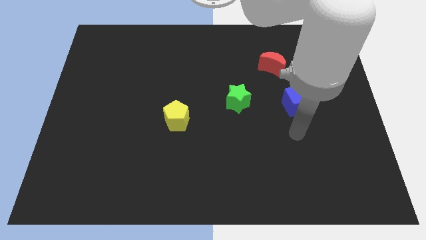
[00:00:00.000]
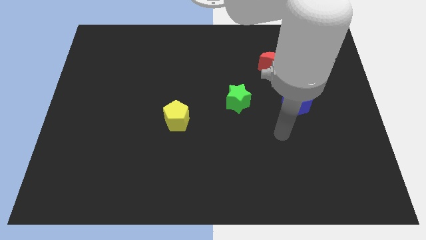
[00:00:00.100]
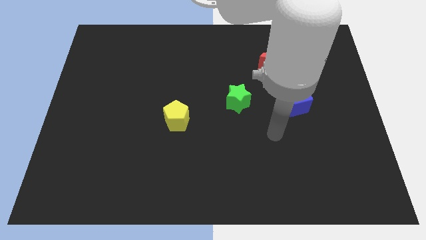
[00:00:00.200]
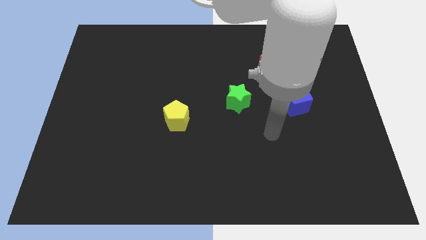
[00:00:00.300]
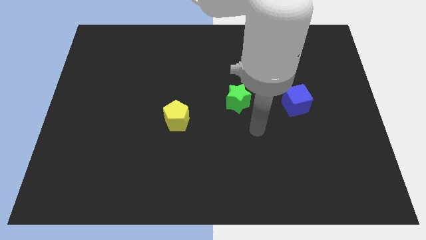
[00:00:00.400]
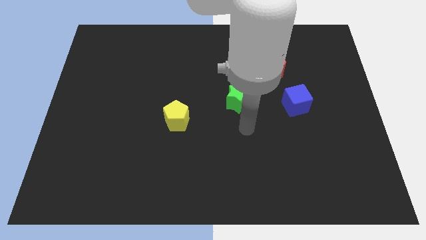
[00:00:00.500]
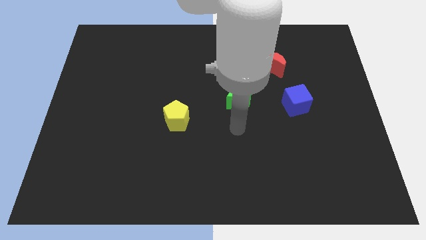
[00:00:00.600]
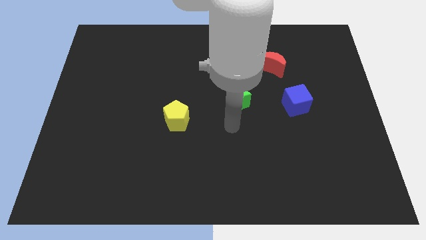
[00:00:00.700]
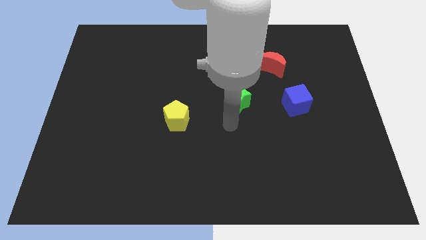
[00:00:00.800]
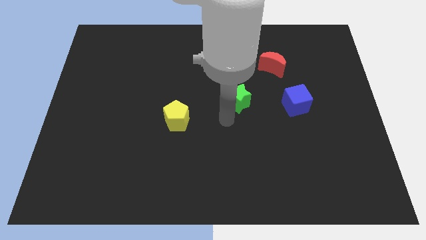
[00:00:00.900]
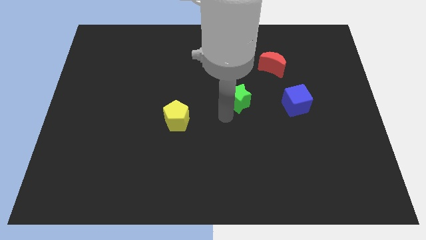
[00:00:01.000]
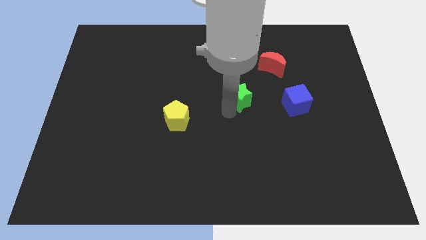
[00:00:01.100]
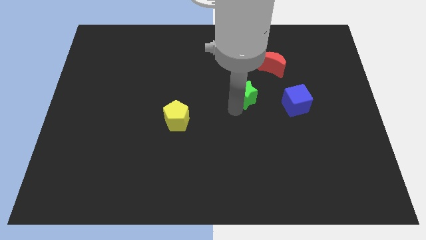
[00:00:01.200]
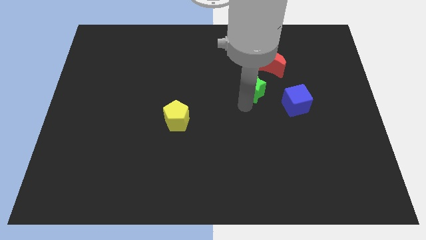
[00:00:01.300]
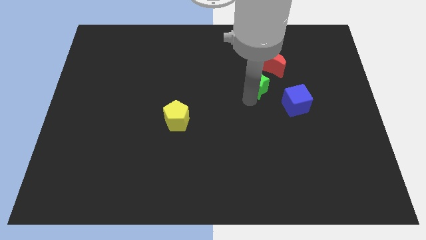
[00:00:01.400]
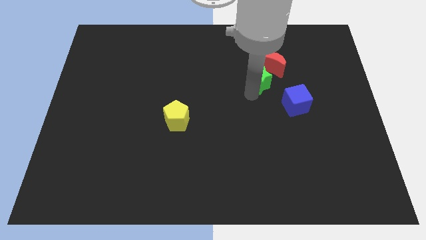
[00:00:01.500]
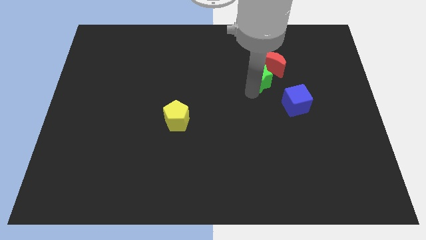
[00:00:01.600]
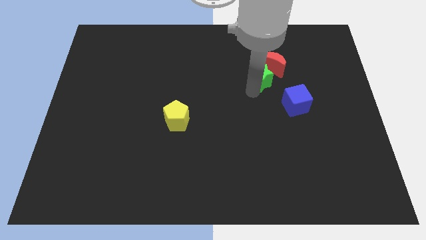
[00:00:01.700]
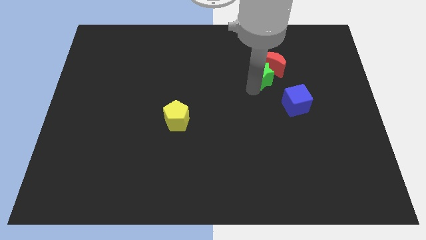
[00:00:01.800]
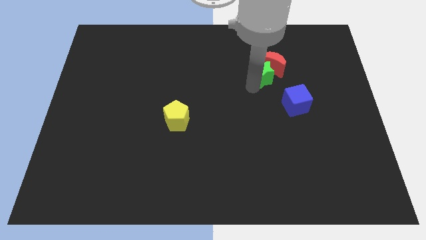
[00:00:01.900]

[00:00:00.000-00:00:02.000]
slide the green block towards the red moon

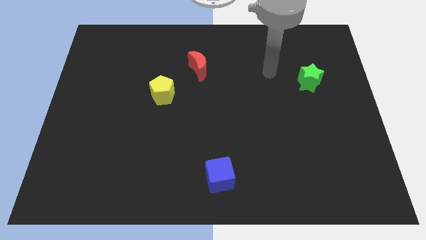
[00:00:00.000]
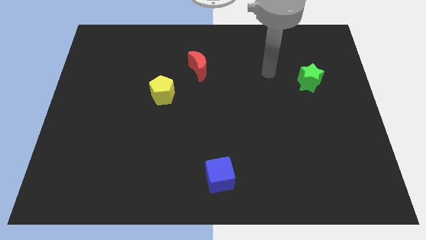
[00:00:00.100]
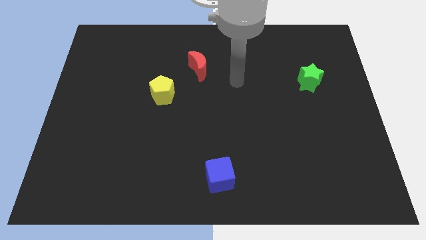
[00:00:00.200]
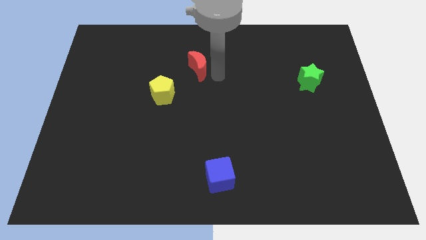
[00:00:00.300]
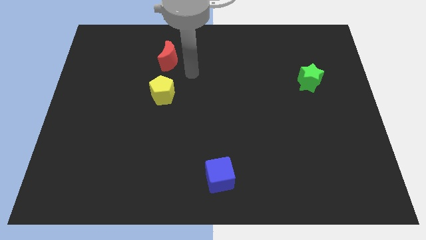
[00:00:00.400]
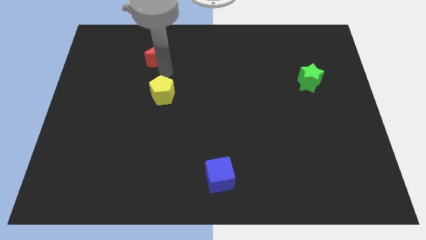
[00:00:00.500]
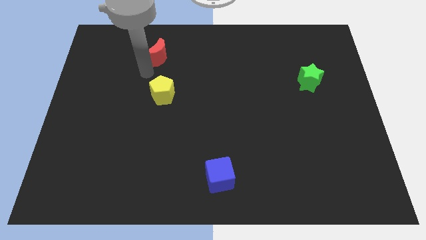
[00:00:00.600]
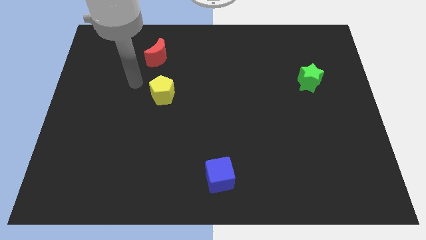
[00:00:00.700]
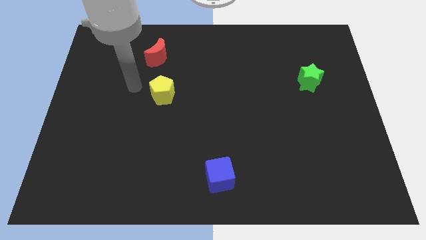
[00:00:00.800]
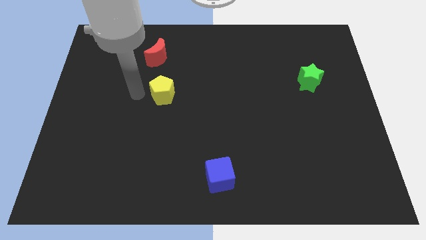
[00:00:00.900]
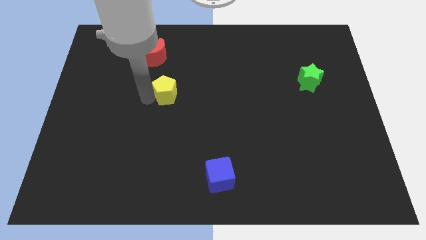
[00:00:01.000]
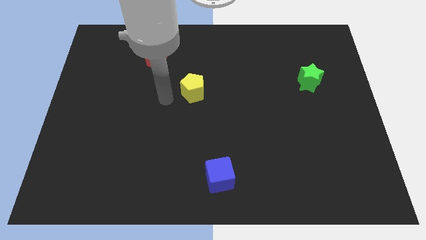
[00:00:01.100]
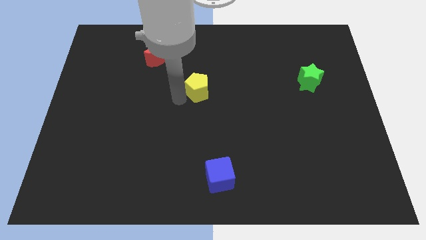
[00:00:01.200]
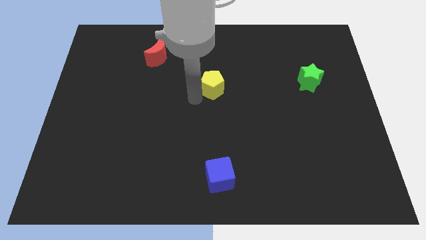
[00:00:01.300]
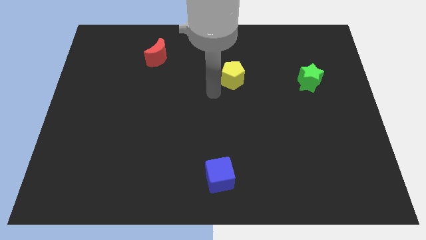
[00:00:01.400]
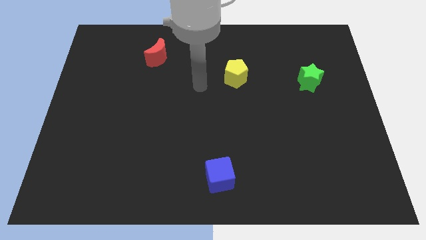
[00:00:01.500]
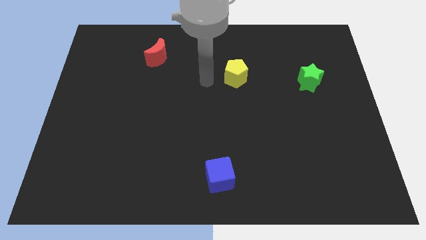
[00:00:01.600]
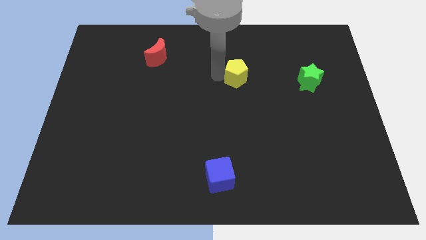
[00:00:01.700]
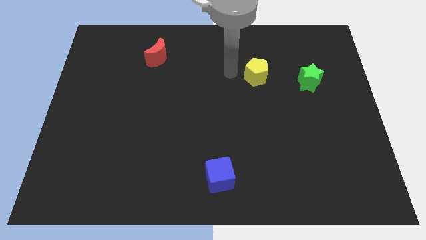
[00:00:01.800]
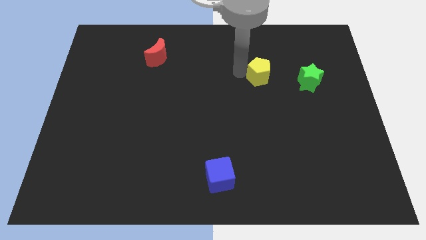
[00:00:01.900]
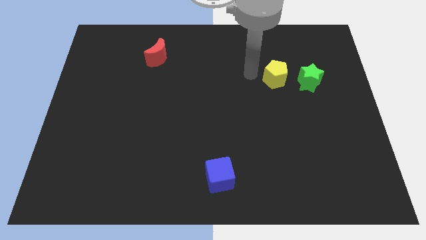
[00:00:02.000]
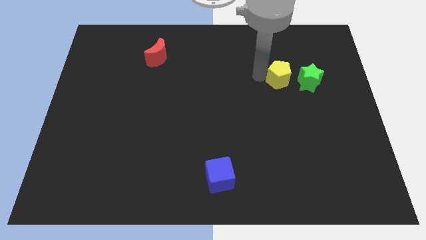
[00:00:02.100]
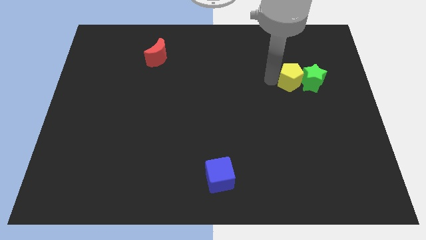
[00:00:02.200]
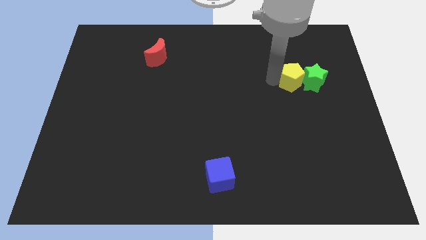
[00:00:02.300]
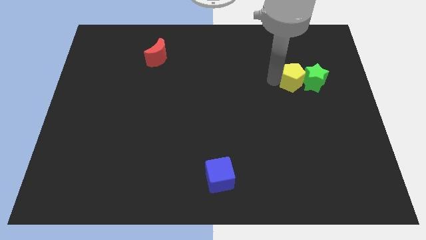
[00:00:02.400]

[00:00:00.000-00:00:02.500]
move the yellow pentagon towards the green star

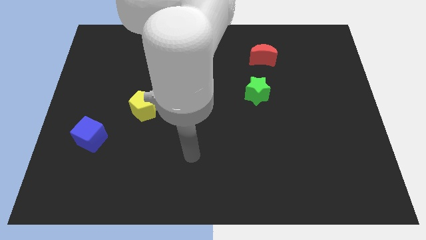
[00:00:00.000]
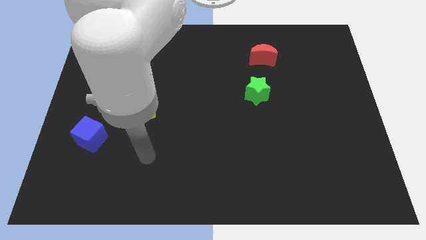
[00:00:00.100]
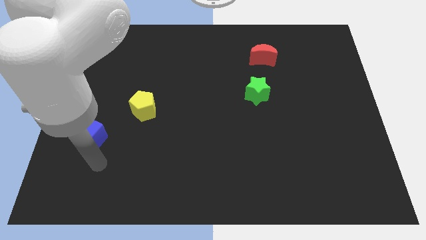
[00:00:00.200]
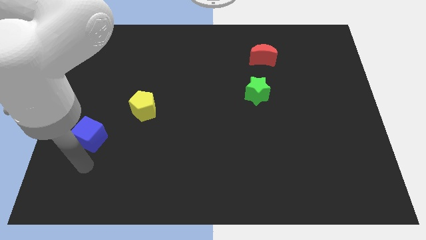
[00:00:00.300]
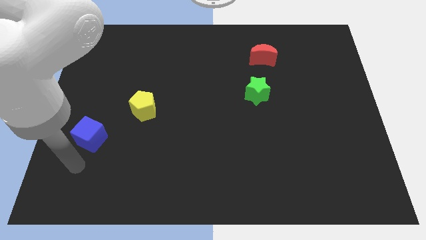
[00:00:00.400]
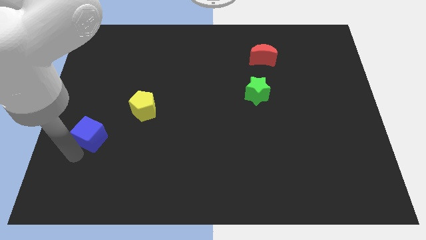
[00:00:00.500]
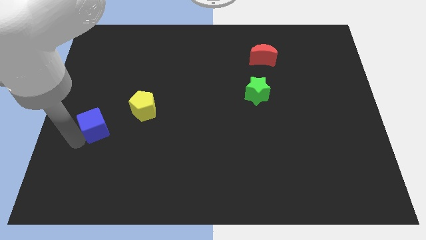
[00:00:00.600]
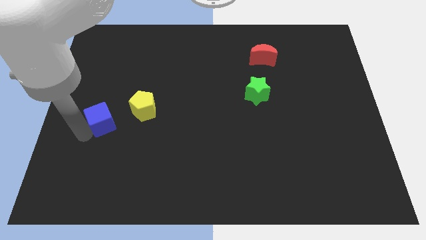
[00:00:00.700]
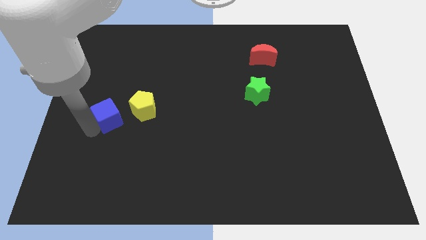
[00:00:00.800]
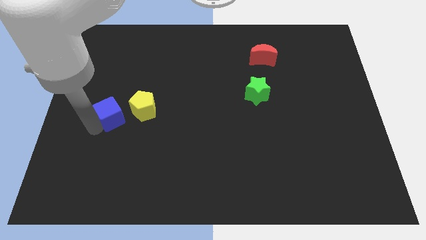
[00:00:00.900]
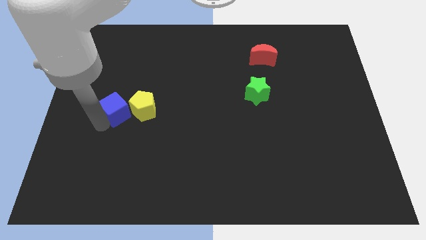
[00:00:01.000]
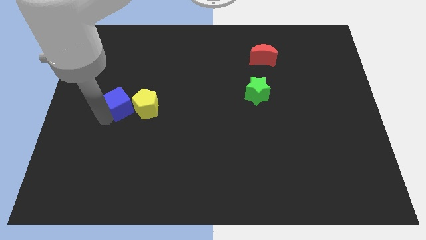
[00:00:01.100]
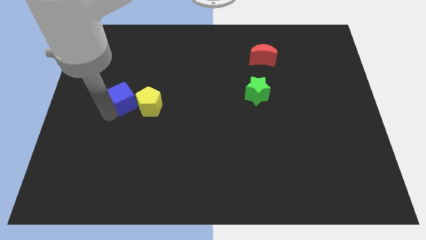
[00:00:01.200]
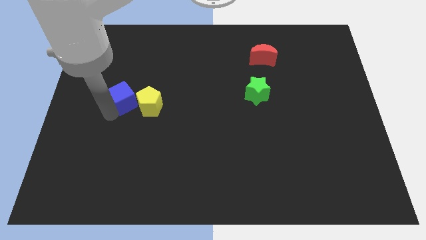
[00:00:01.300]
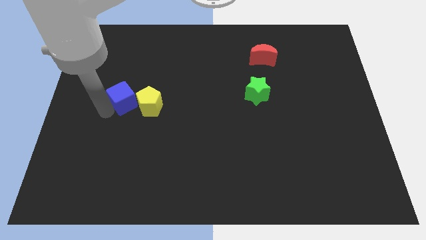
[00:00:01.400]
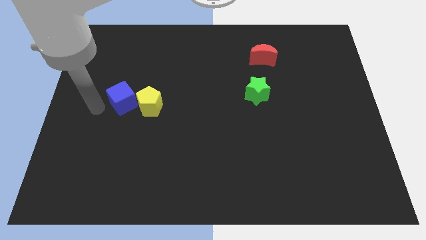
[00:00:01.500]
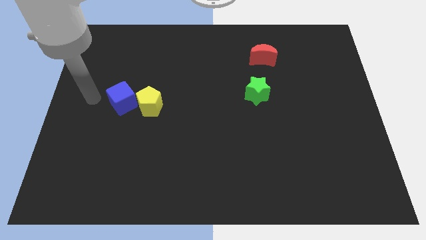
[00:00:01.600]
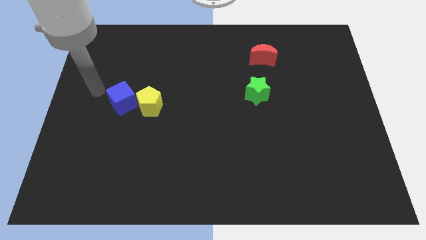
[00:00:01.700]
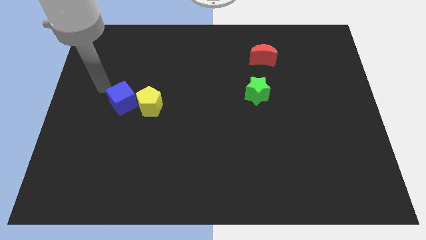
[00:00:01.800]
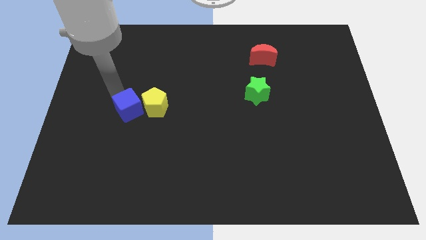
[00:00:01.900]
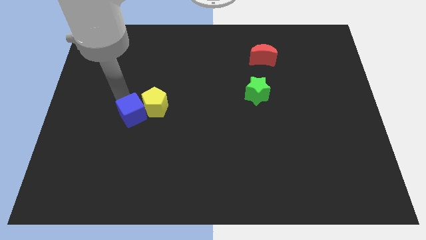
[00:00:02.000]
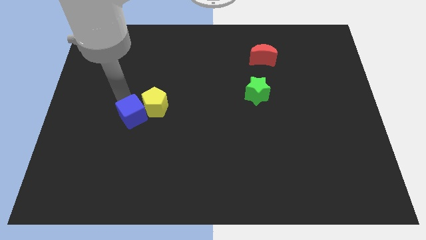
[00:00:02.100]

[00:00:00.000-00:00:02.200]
put the blue cube next to the pentagon

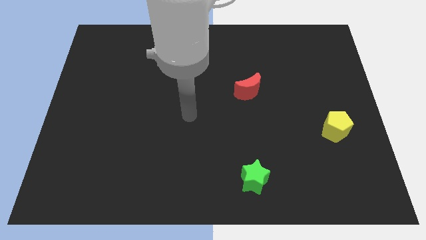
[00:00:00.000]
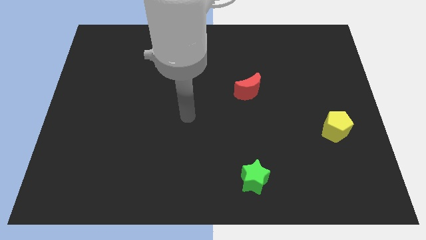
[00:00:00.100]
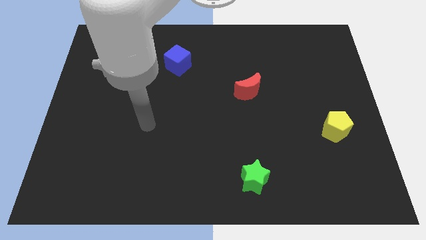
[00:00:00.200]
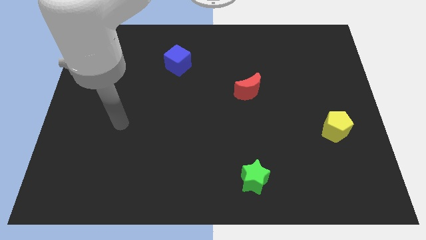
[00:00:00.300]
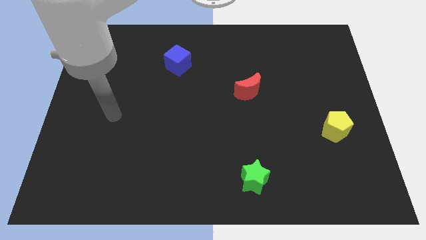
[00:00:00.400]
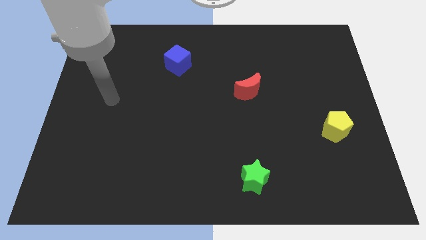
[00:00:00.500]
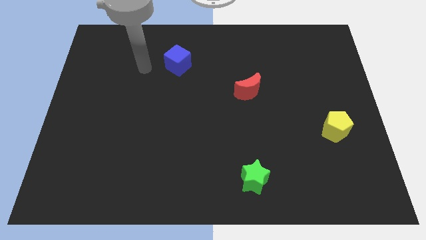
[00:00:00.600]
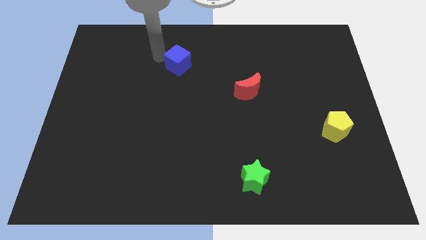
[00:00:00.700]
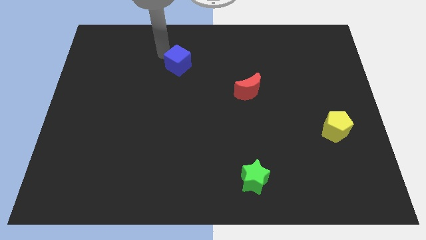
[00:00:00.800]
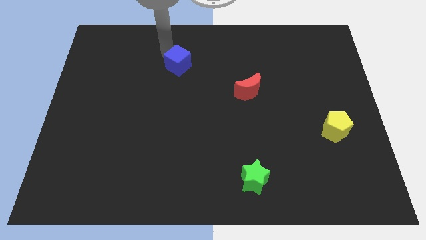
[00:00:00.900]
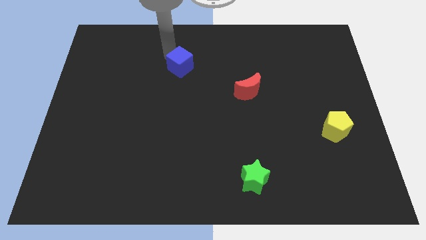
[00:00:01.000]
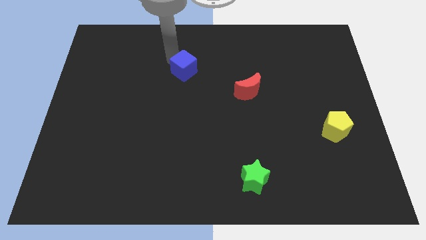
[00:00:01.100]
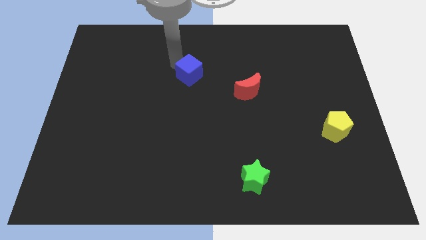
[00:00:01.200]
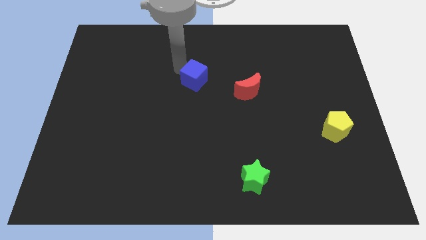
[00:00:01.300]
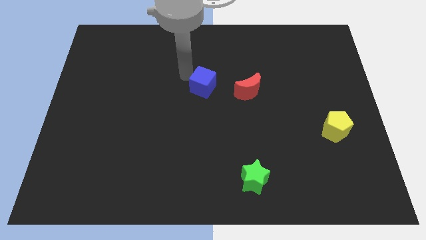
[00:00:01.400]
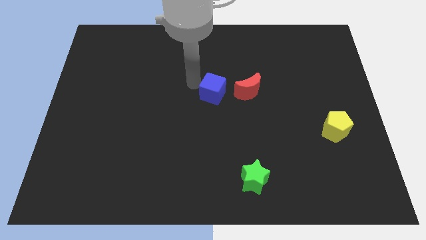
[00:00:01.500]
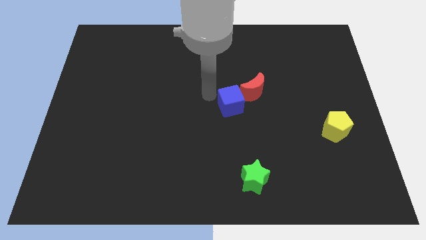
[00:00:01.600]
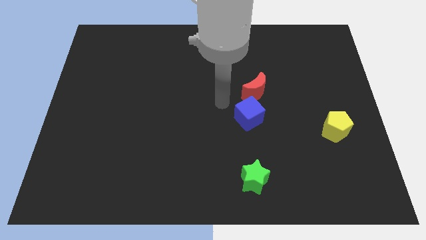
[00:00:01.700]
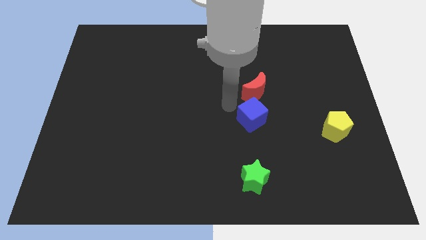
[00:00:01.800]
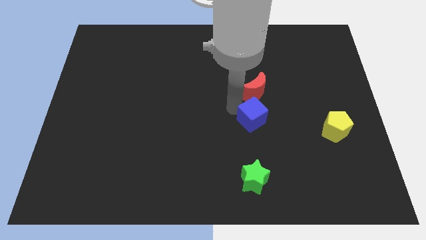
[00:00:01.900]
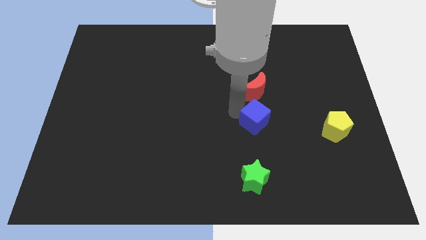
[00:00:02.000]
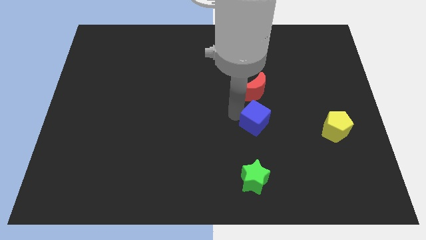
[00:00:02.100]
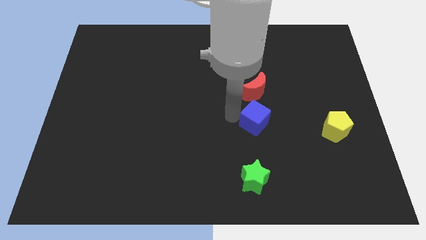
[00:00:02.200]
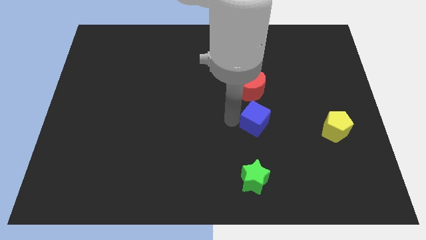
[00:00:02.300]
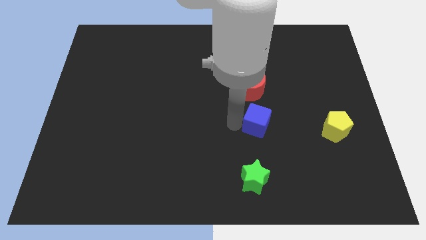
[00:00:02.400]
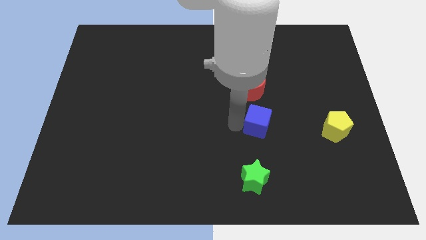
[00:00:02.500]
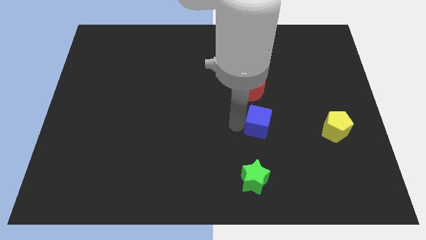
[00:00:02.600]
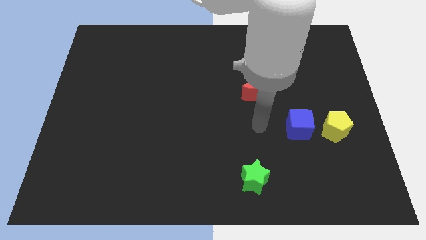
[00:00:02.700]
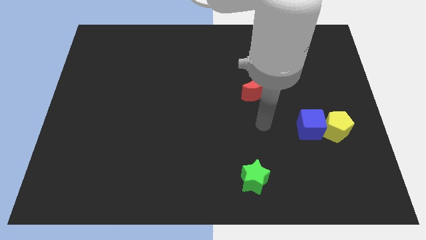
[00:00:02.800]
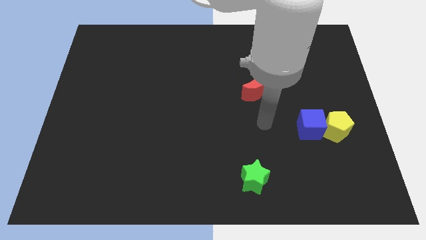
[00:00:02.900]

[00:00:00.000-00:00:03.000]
push the blue block close to the yellow block
